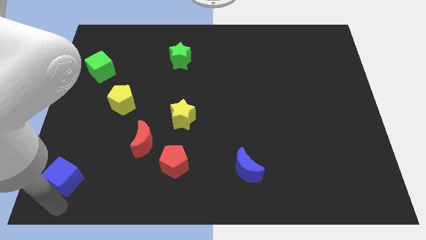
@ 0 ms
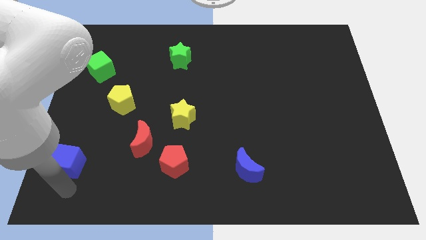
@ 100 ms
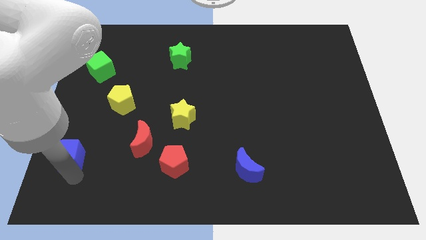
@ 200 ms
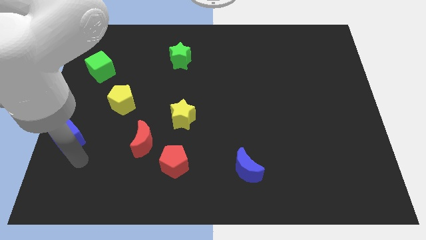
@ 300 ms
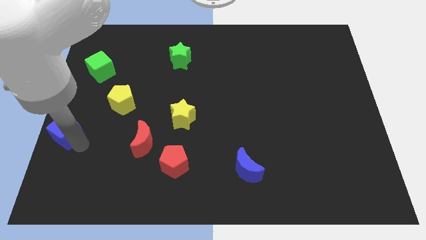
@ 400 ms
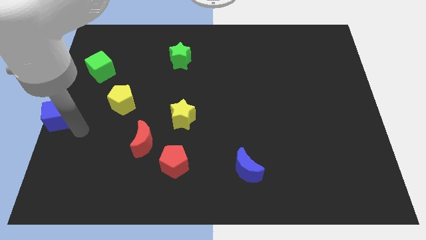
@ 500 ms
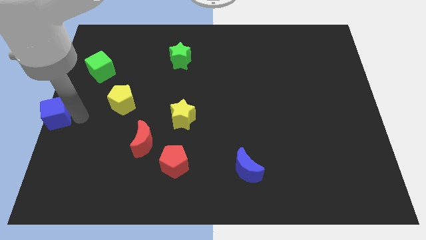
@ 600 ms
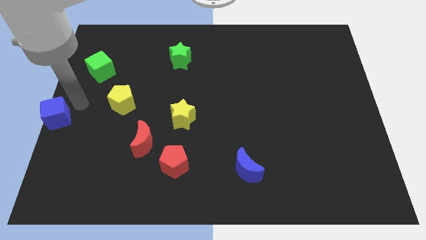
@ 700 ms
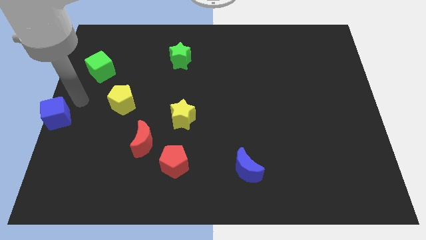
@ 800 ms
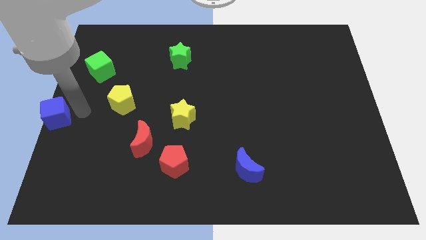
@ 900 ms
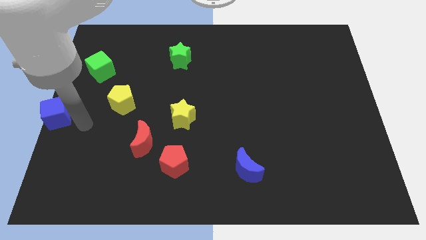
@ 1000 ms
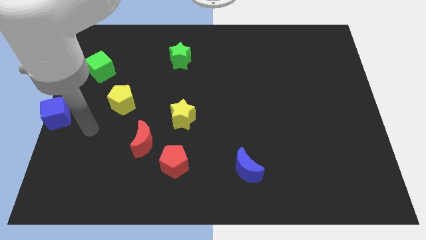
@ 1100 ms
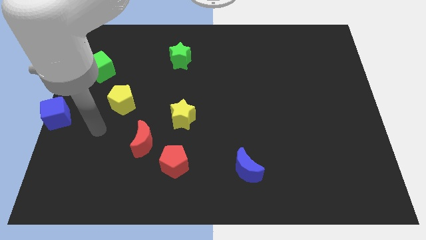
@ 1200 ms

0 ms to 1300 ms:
put blue cube at the center left side of the board

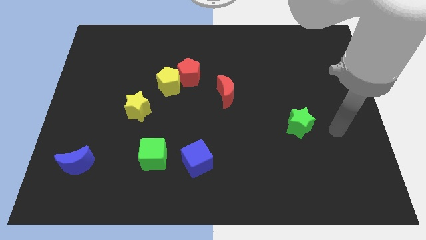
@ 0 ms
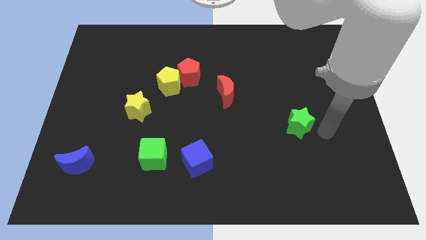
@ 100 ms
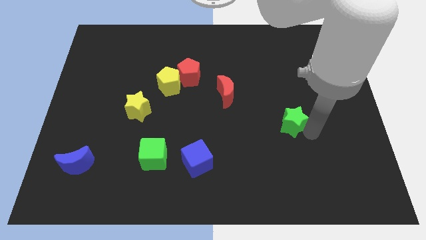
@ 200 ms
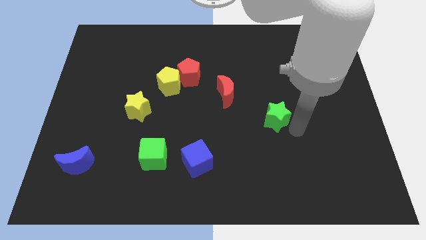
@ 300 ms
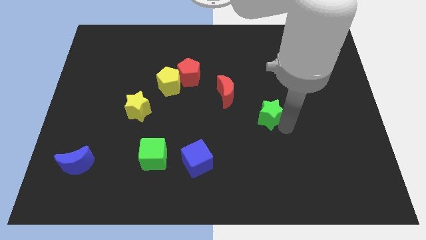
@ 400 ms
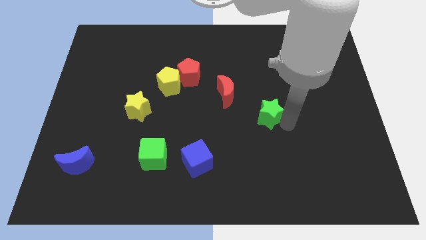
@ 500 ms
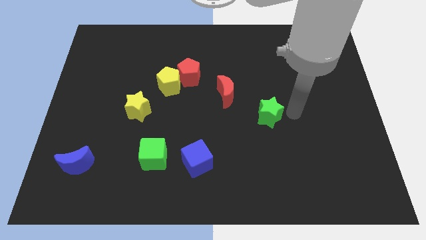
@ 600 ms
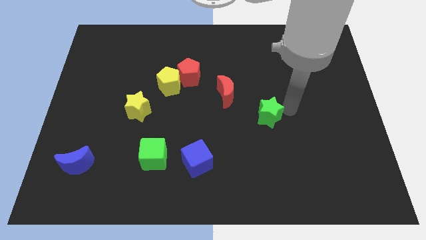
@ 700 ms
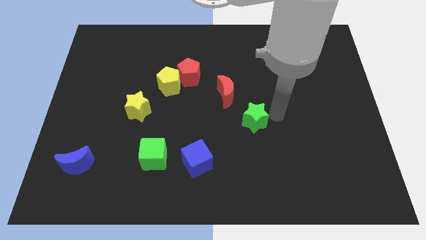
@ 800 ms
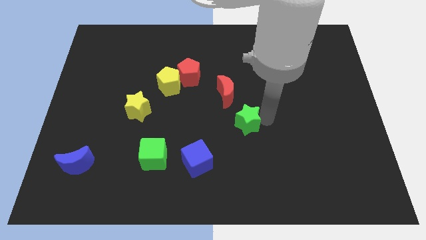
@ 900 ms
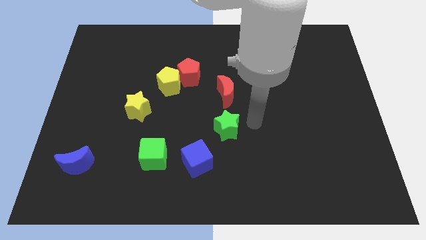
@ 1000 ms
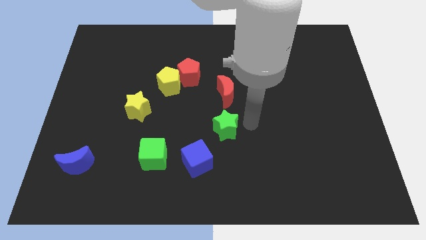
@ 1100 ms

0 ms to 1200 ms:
push the green star to the bottom of the red crescent

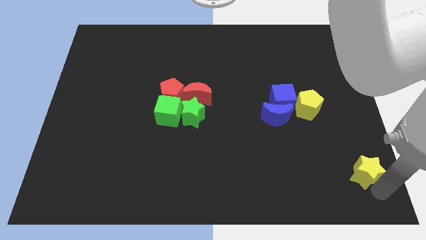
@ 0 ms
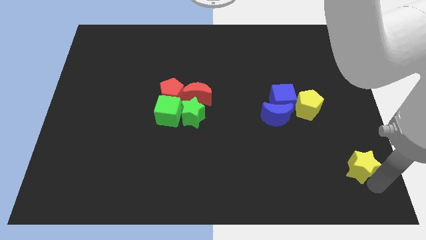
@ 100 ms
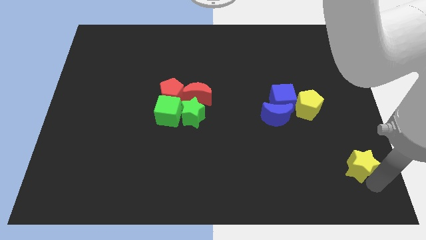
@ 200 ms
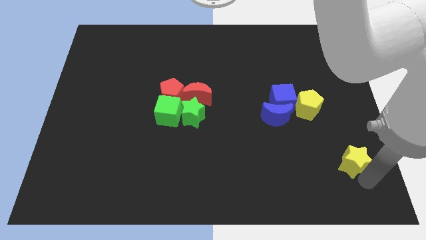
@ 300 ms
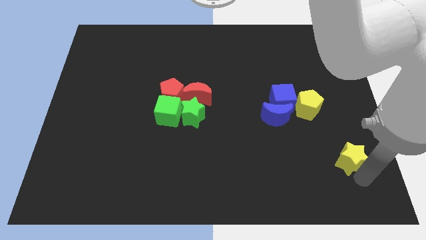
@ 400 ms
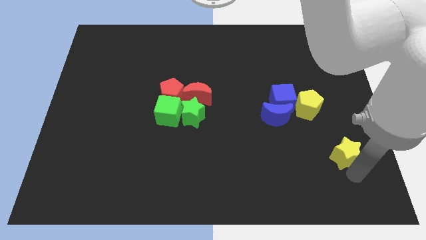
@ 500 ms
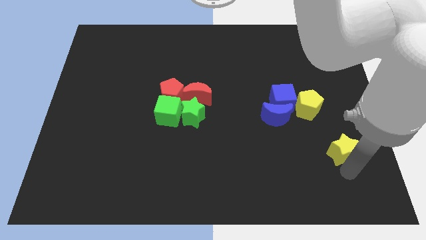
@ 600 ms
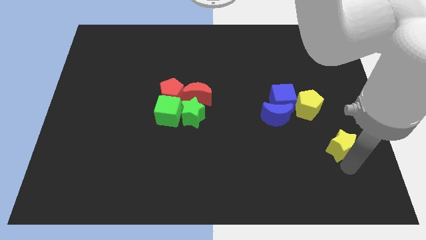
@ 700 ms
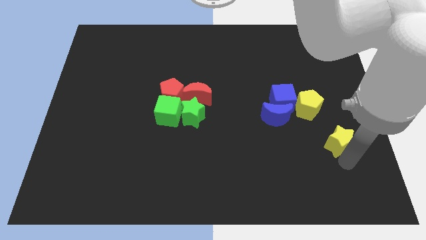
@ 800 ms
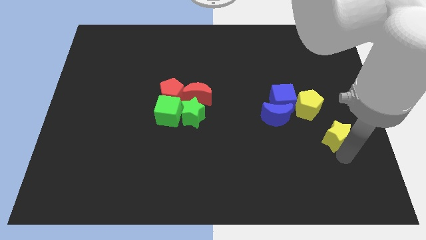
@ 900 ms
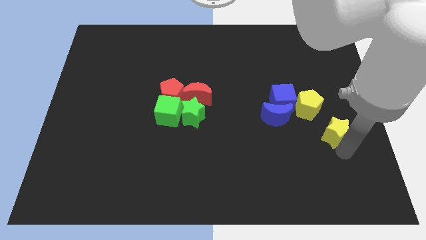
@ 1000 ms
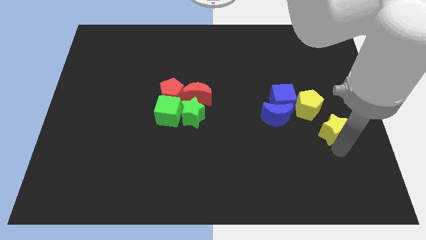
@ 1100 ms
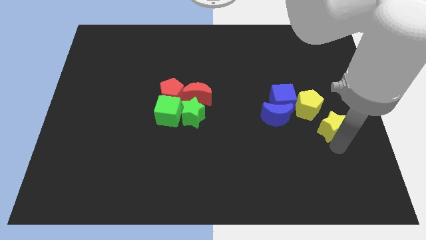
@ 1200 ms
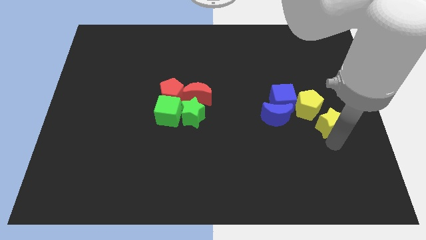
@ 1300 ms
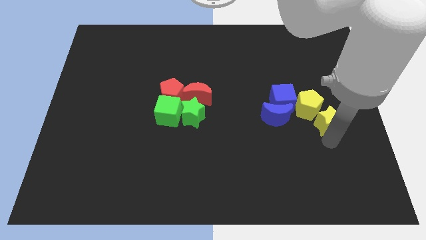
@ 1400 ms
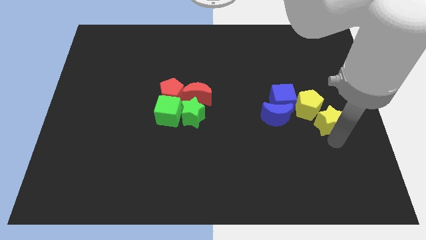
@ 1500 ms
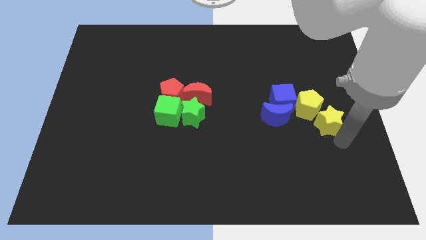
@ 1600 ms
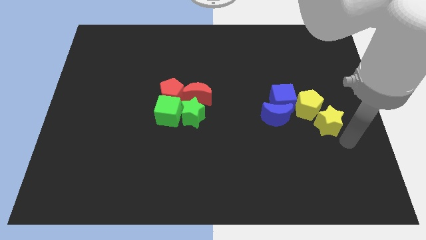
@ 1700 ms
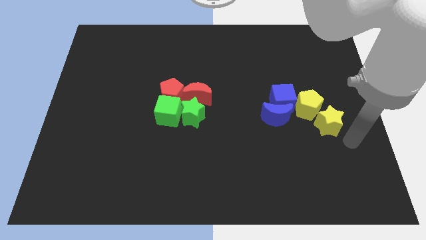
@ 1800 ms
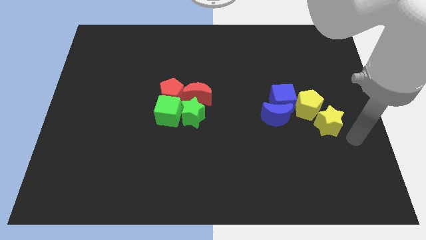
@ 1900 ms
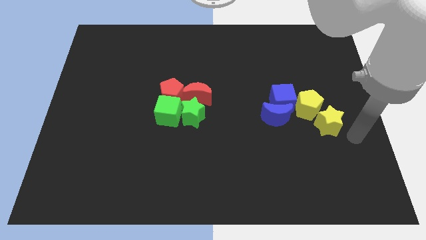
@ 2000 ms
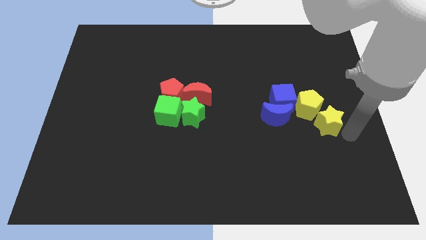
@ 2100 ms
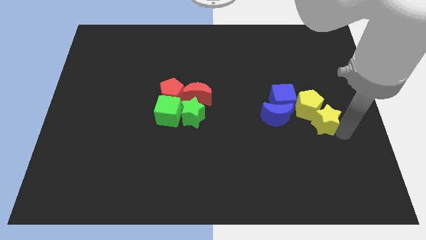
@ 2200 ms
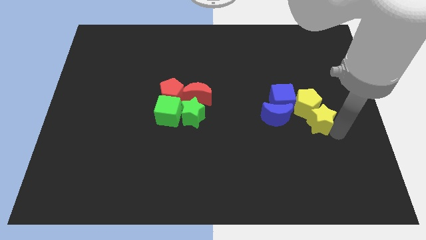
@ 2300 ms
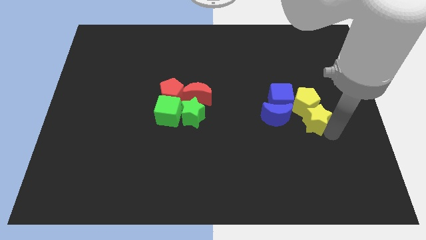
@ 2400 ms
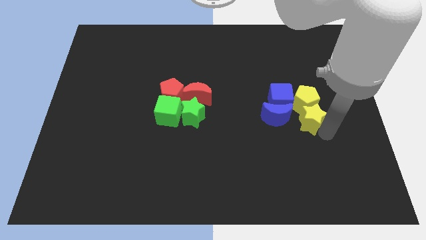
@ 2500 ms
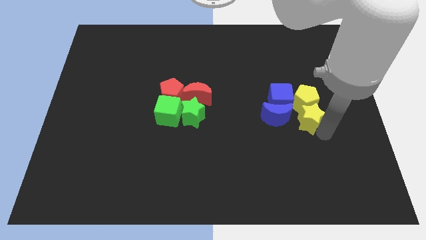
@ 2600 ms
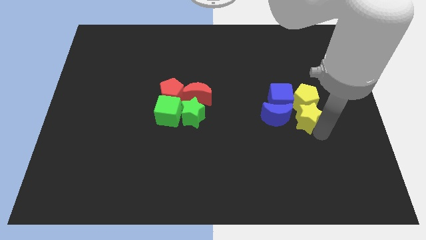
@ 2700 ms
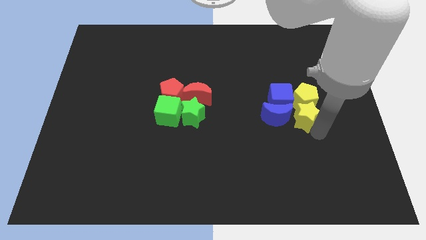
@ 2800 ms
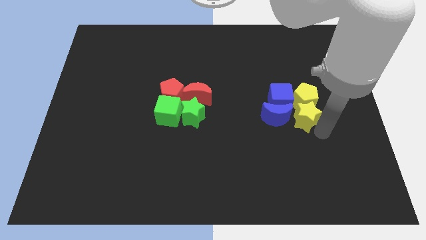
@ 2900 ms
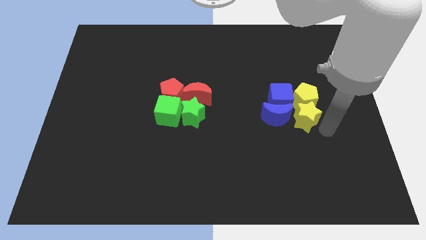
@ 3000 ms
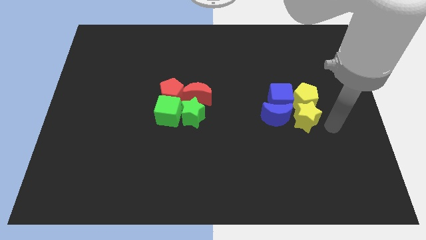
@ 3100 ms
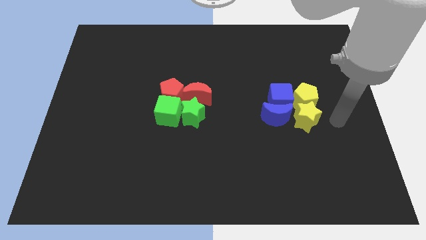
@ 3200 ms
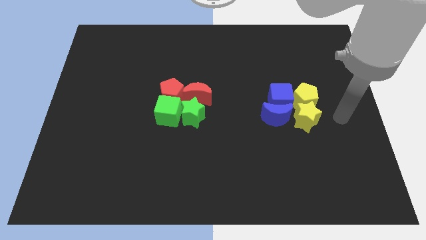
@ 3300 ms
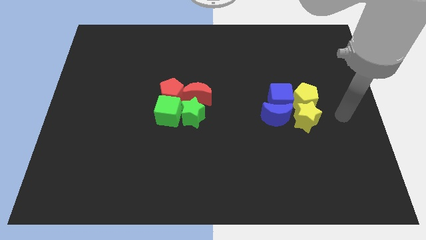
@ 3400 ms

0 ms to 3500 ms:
place yellow star below the yellow pentagon

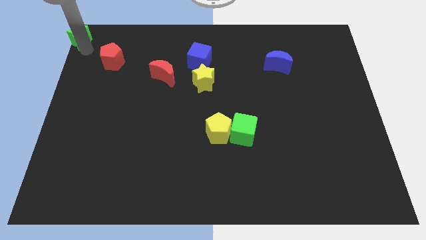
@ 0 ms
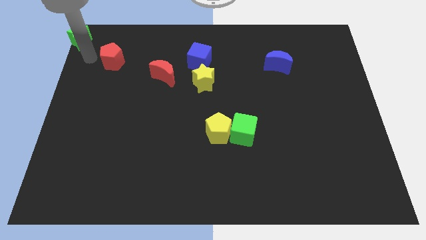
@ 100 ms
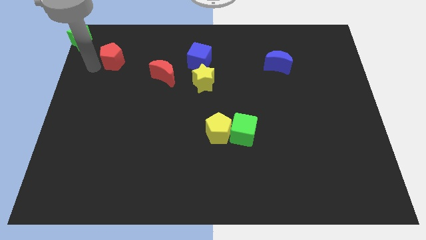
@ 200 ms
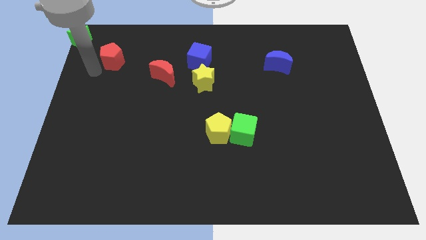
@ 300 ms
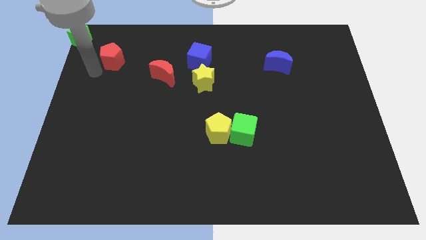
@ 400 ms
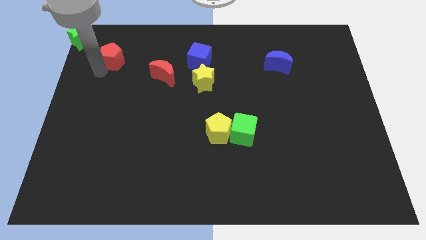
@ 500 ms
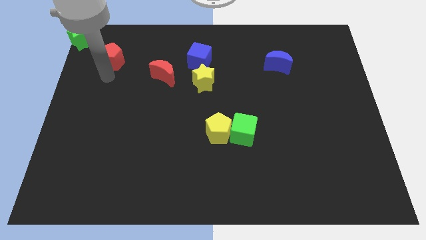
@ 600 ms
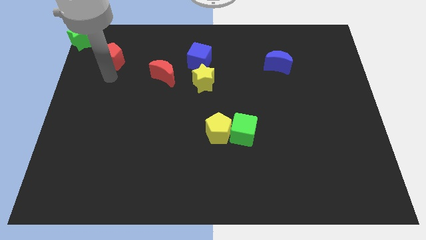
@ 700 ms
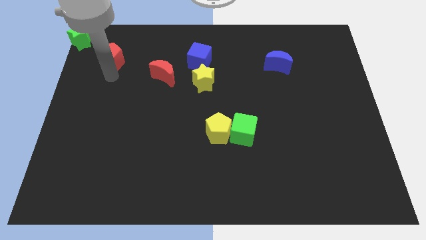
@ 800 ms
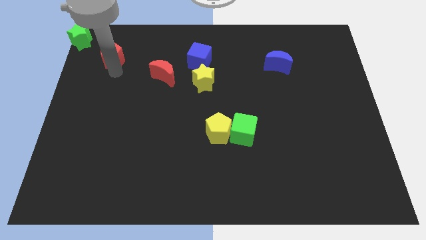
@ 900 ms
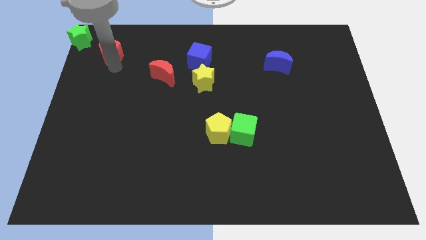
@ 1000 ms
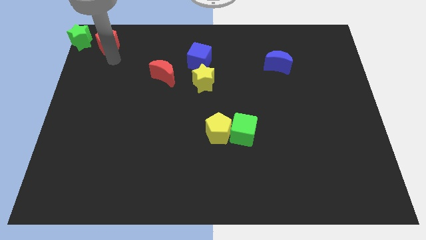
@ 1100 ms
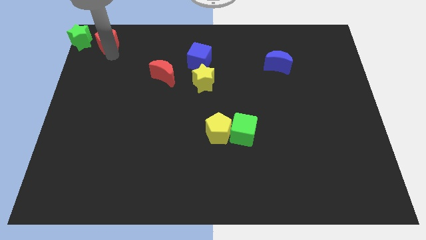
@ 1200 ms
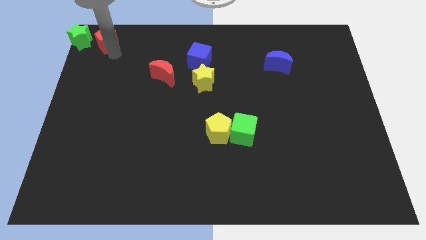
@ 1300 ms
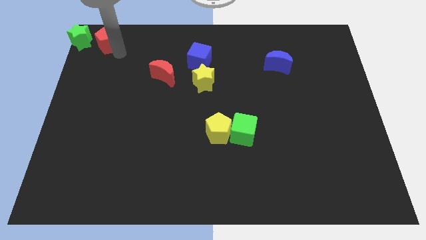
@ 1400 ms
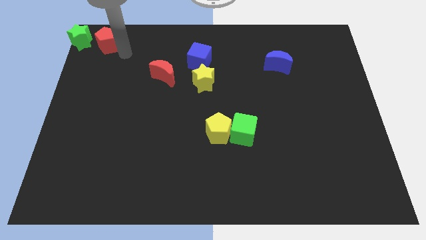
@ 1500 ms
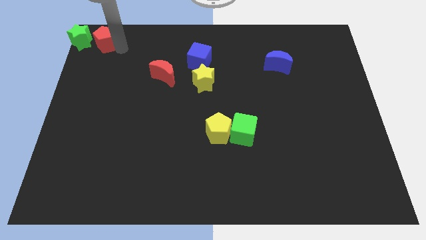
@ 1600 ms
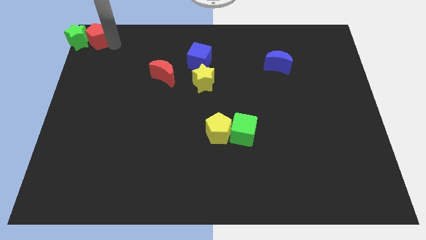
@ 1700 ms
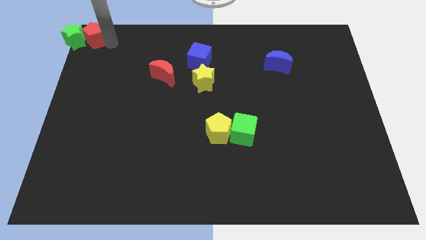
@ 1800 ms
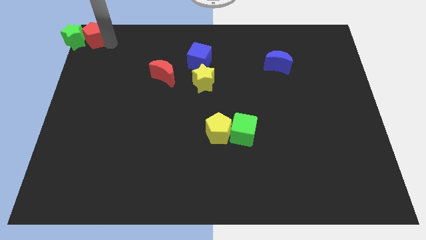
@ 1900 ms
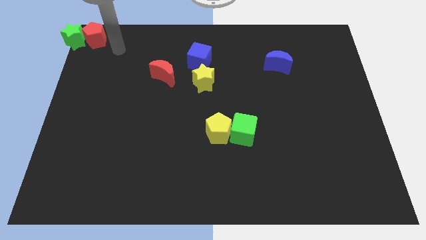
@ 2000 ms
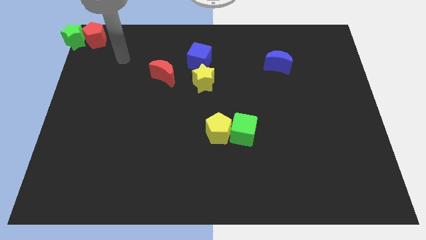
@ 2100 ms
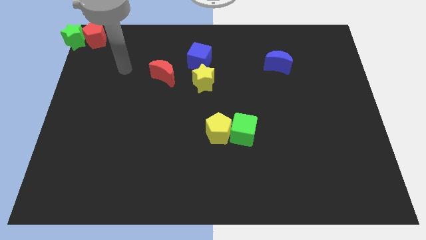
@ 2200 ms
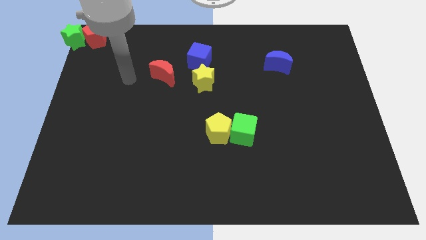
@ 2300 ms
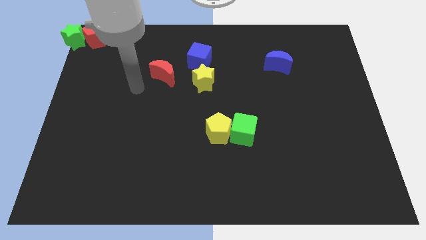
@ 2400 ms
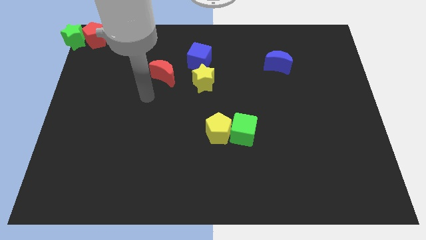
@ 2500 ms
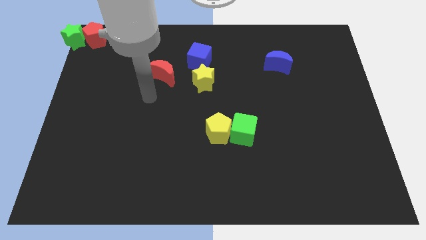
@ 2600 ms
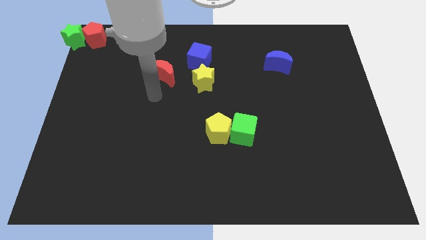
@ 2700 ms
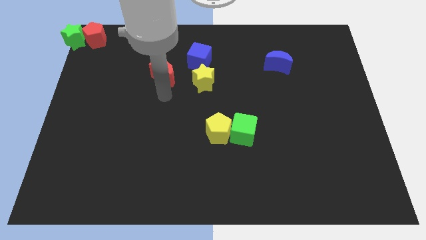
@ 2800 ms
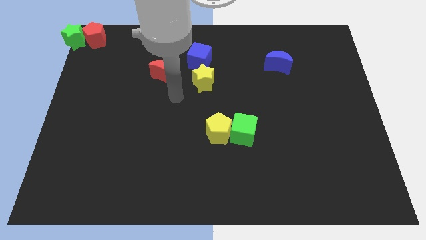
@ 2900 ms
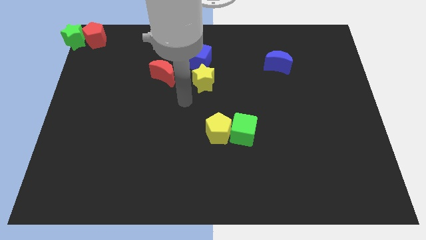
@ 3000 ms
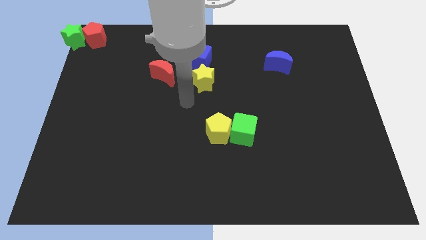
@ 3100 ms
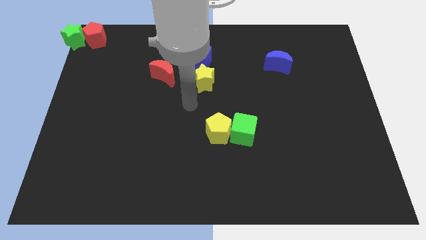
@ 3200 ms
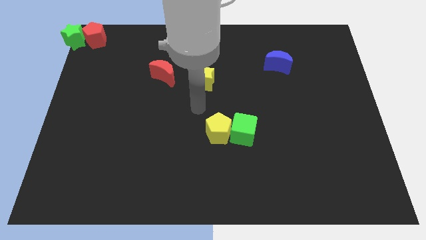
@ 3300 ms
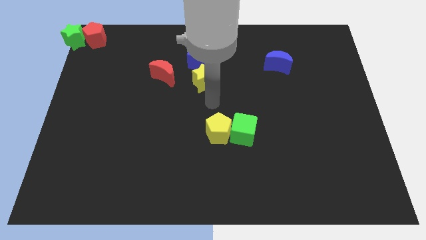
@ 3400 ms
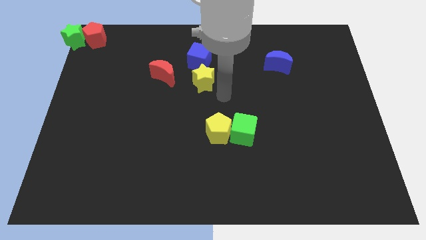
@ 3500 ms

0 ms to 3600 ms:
push the red pentagon to the right of the green star
